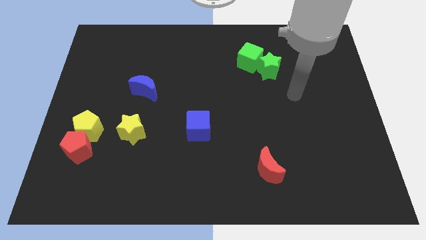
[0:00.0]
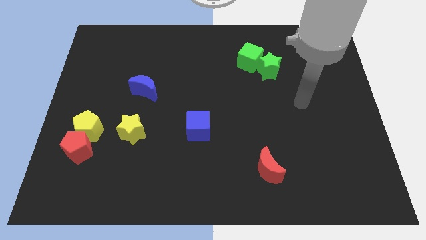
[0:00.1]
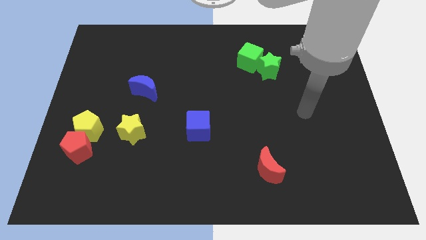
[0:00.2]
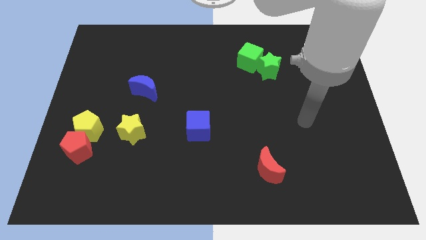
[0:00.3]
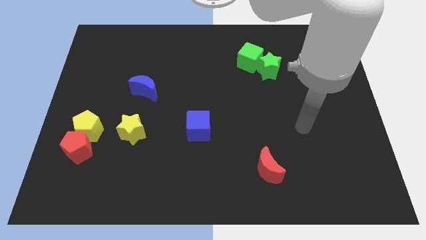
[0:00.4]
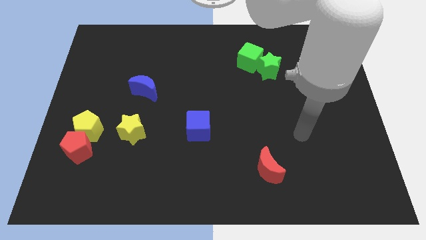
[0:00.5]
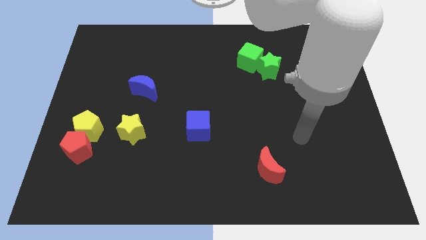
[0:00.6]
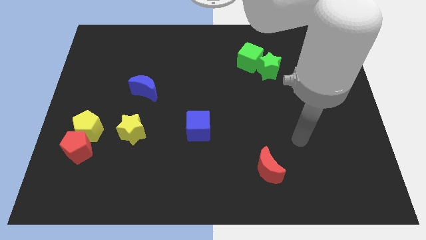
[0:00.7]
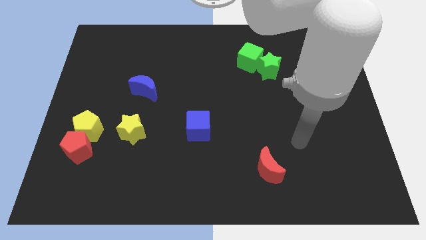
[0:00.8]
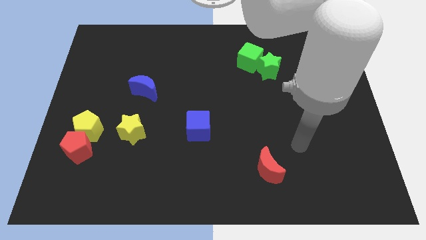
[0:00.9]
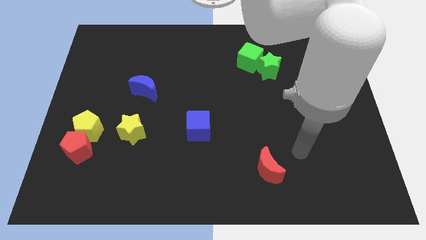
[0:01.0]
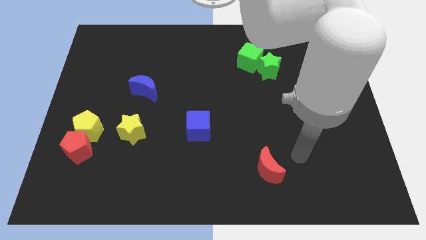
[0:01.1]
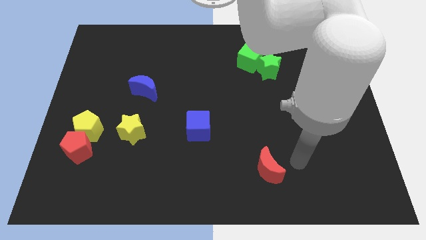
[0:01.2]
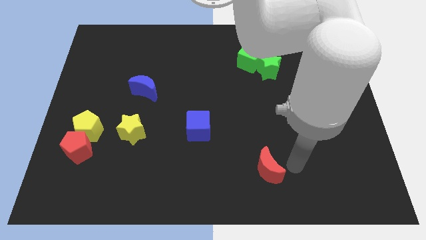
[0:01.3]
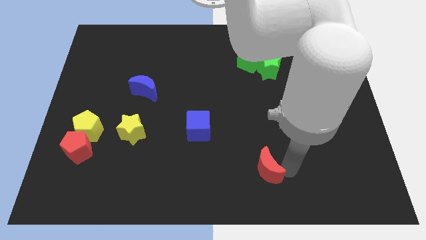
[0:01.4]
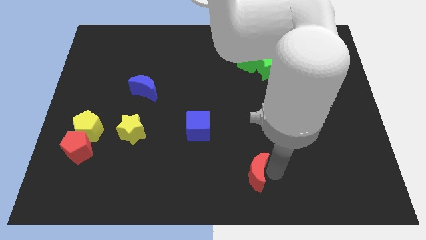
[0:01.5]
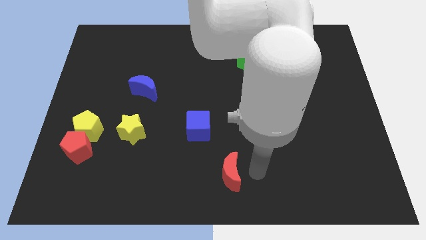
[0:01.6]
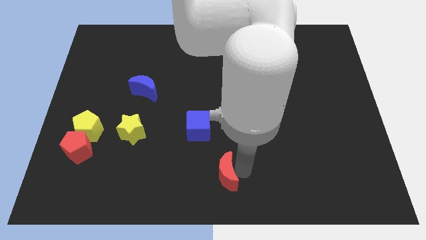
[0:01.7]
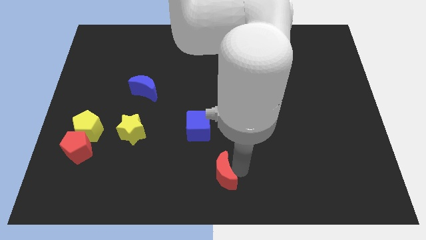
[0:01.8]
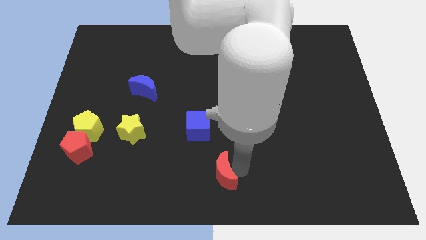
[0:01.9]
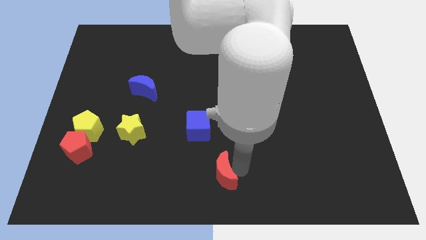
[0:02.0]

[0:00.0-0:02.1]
slightly push the red crescent towards the left side of the board

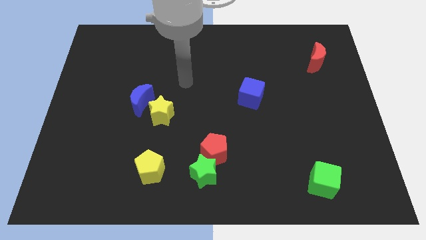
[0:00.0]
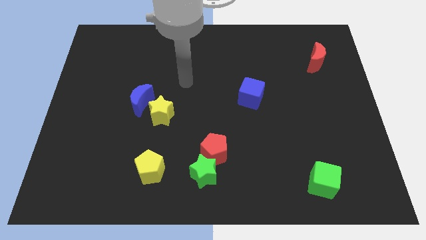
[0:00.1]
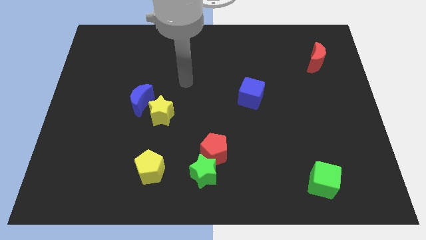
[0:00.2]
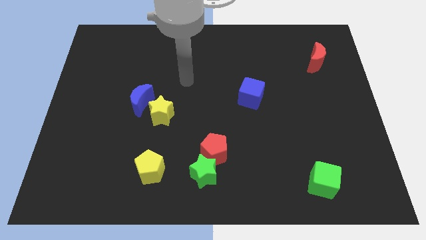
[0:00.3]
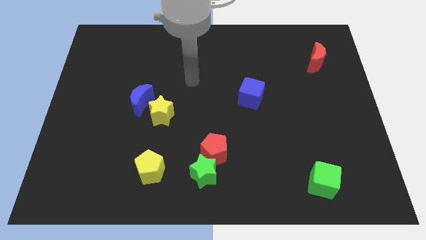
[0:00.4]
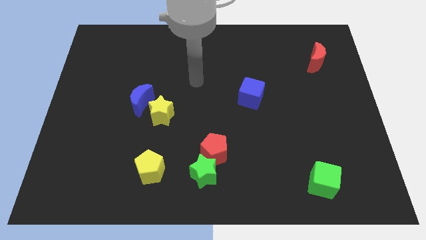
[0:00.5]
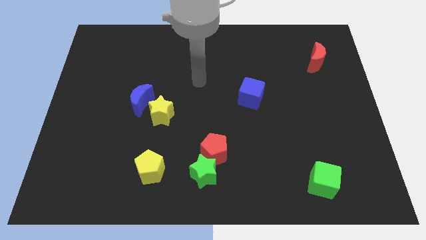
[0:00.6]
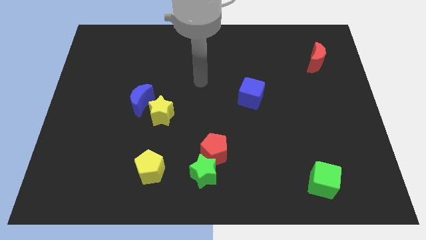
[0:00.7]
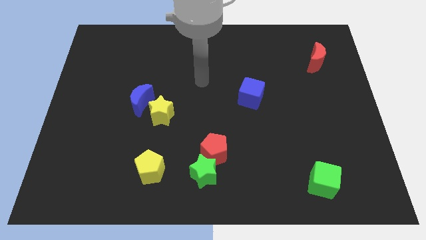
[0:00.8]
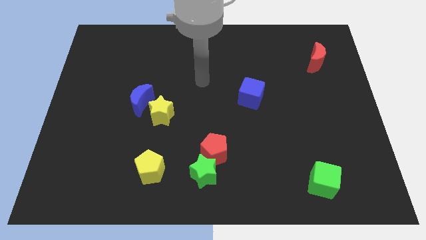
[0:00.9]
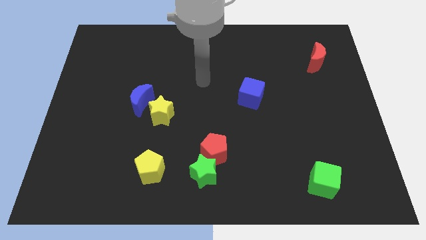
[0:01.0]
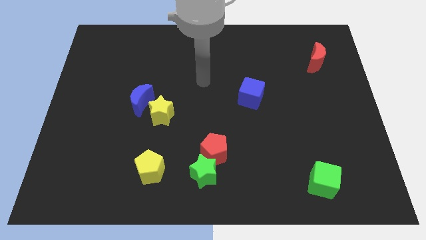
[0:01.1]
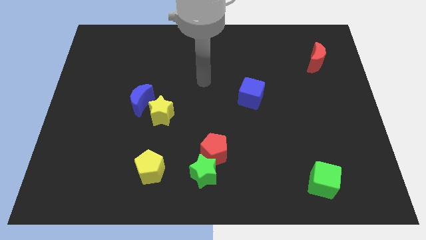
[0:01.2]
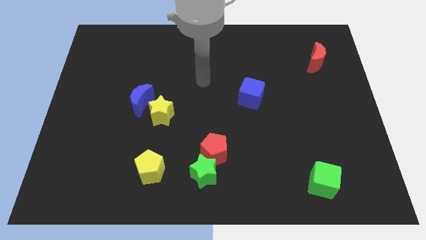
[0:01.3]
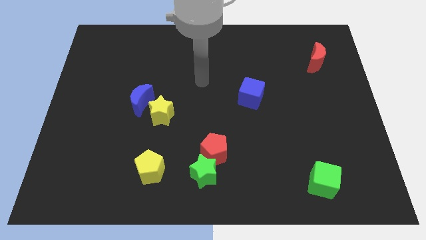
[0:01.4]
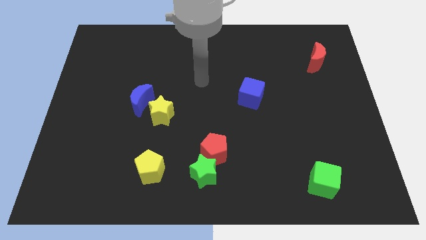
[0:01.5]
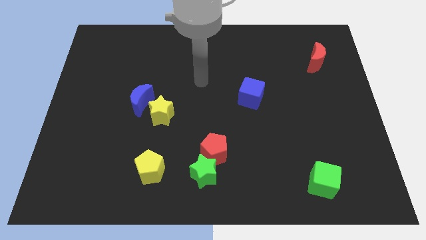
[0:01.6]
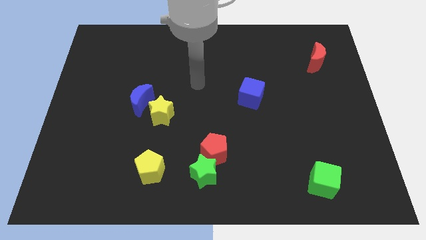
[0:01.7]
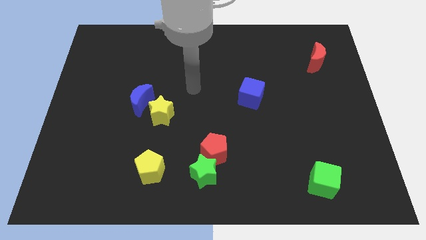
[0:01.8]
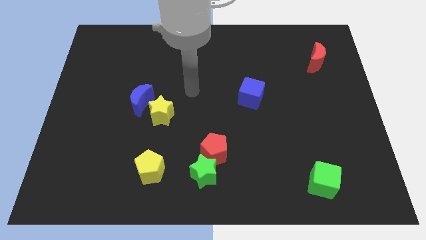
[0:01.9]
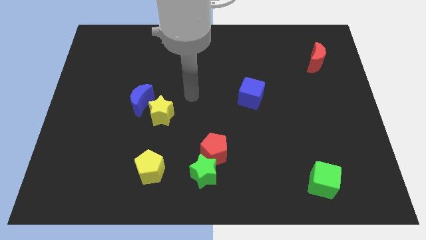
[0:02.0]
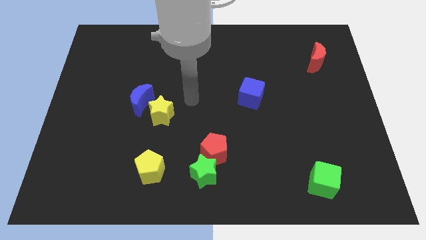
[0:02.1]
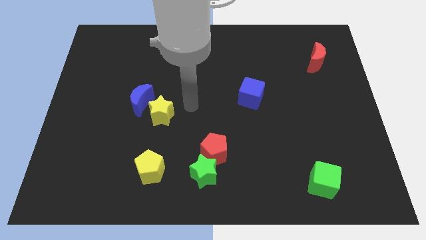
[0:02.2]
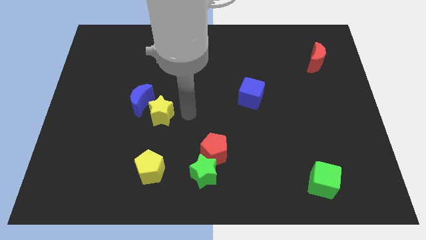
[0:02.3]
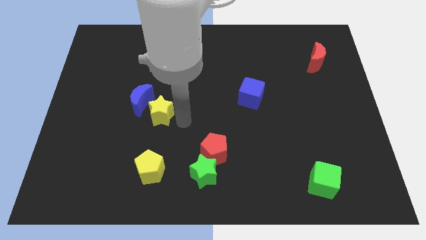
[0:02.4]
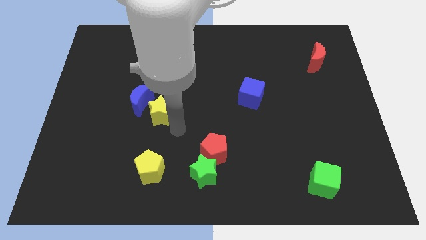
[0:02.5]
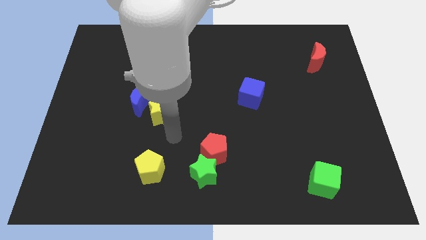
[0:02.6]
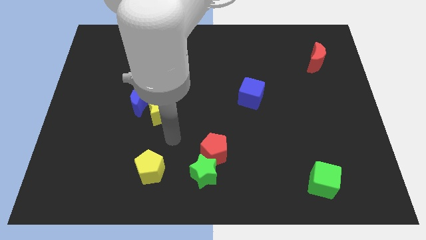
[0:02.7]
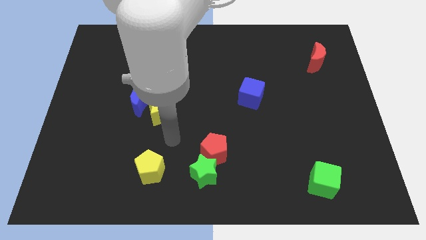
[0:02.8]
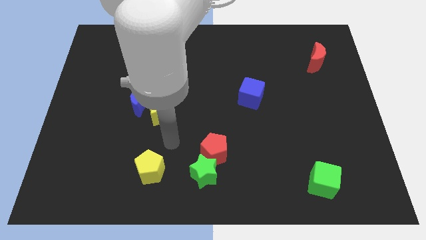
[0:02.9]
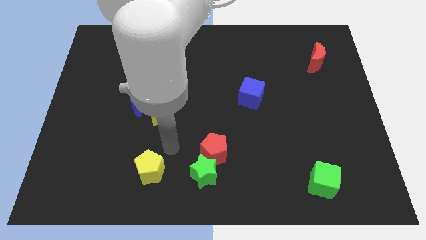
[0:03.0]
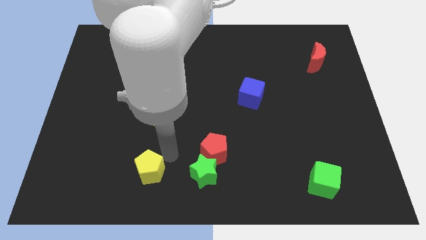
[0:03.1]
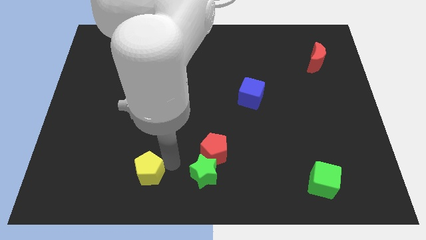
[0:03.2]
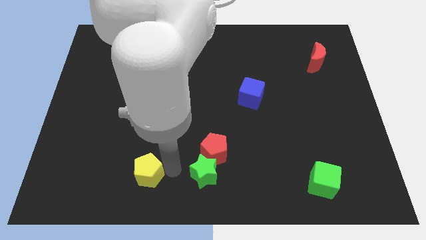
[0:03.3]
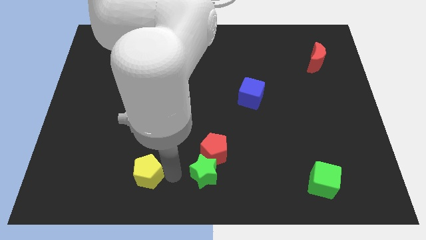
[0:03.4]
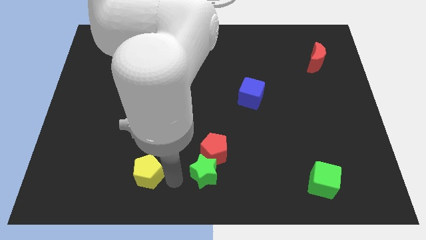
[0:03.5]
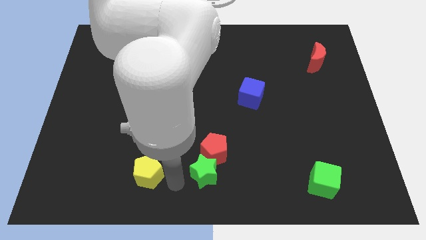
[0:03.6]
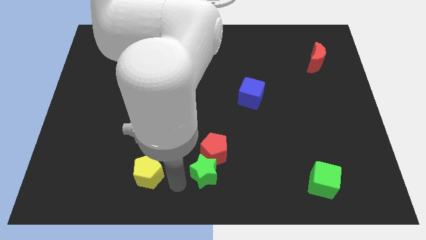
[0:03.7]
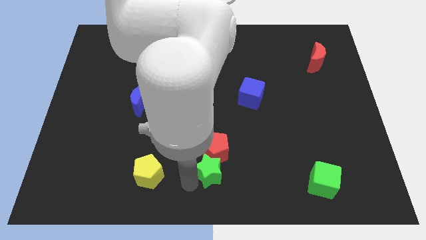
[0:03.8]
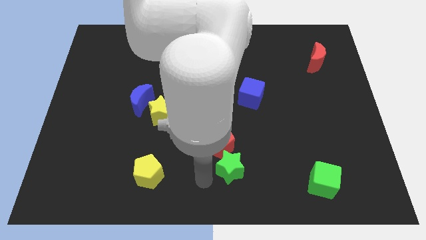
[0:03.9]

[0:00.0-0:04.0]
slightly push the yellow pentagongreen star towards the bottom center of the board

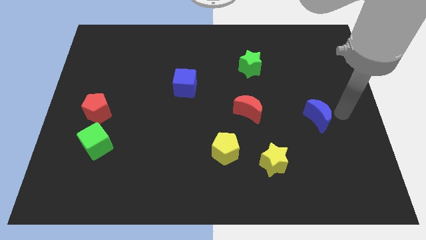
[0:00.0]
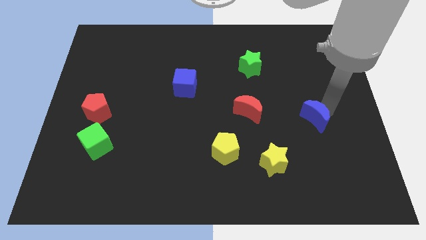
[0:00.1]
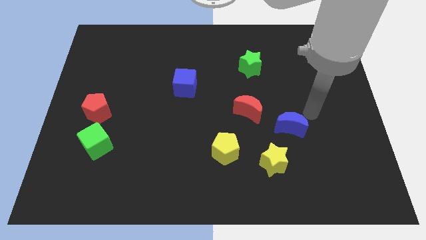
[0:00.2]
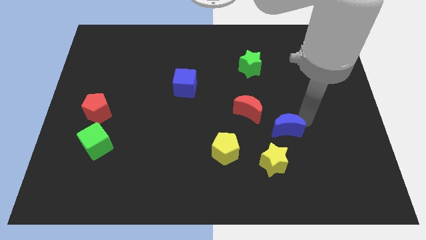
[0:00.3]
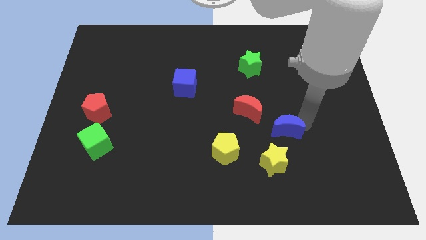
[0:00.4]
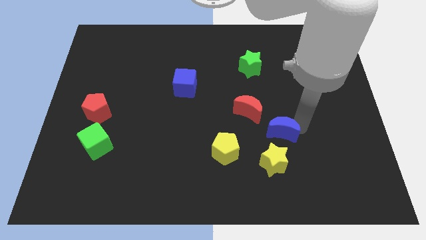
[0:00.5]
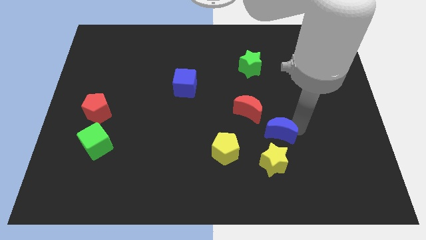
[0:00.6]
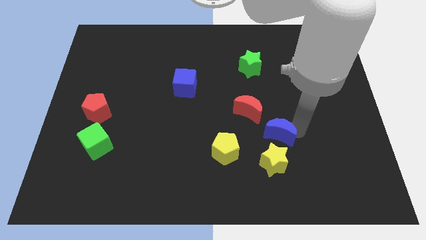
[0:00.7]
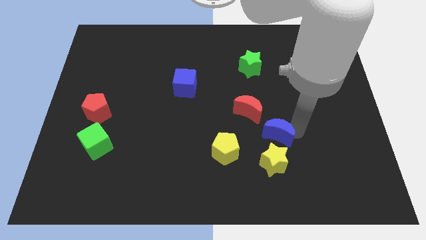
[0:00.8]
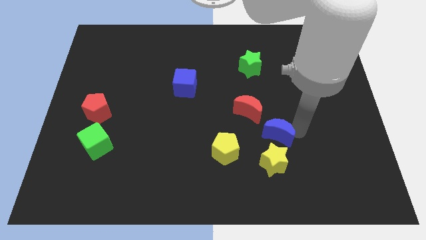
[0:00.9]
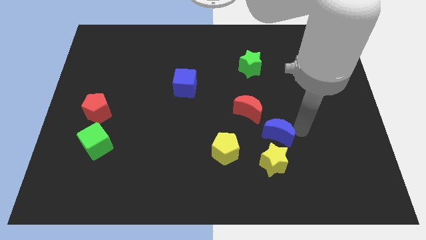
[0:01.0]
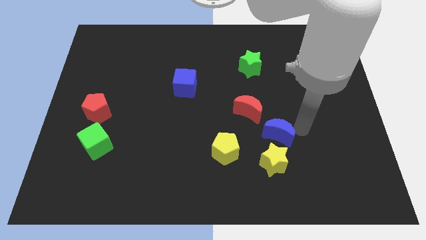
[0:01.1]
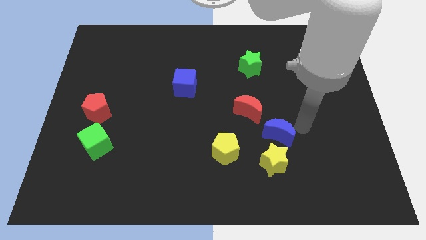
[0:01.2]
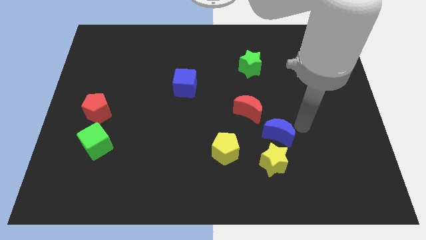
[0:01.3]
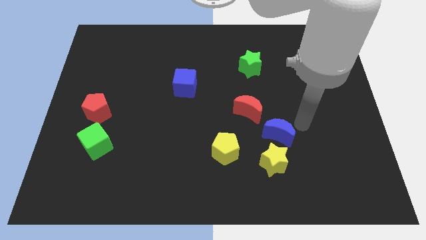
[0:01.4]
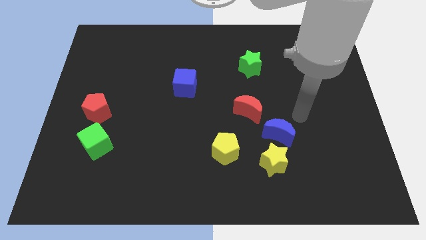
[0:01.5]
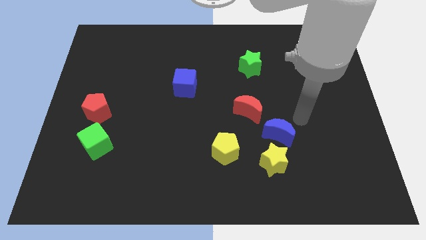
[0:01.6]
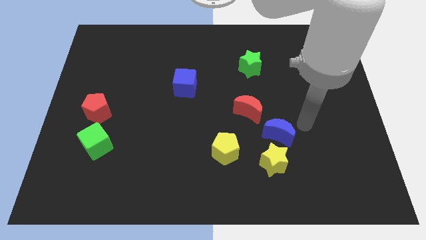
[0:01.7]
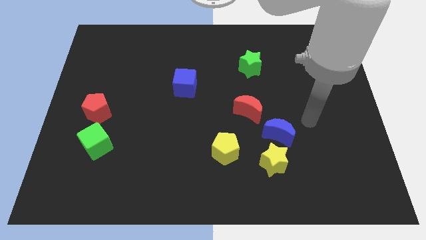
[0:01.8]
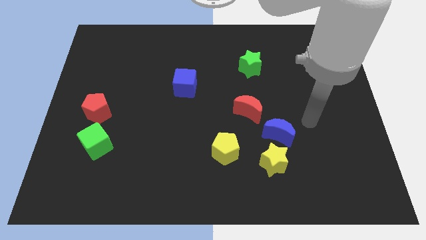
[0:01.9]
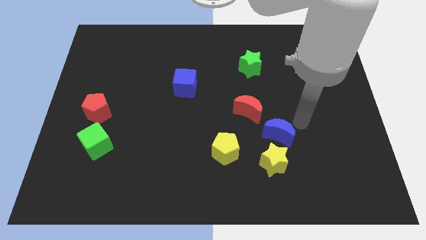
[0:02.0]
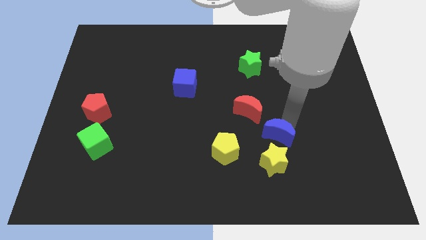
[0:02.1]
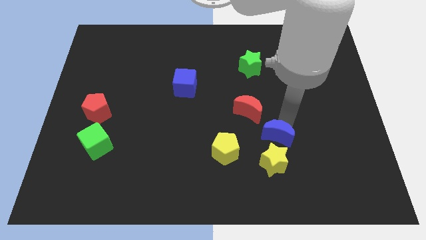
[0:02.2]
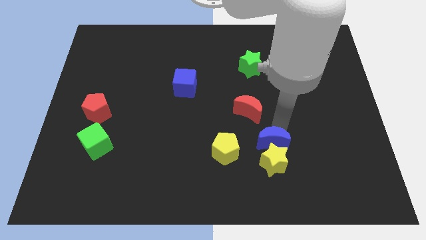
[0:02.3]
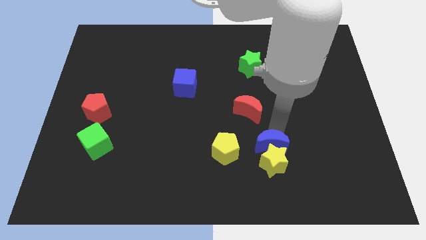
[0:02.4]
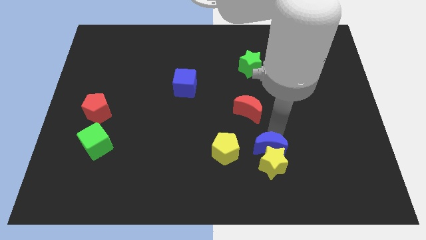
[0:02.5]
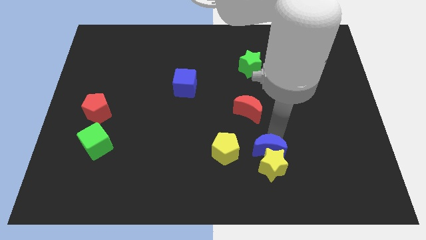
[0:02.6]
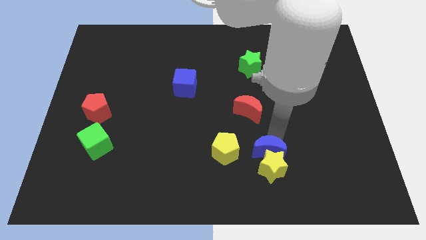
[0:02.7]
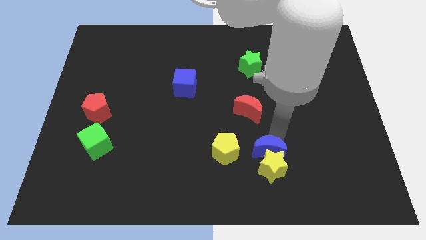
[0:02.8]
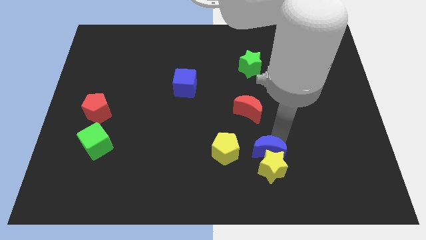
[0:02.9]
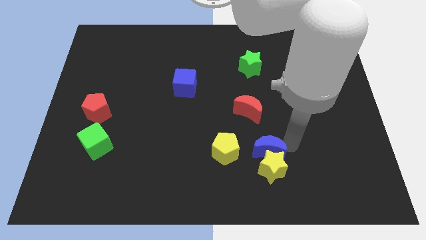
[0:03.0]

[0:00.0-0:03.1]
push the blue moon into the yellow star
